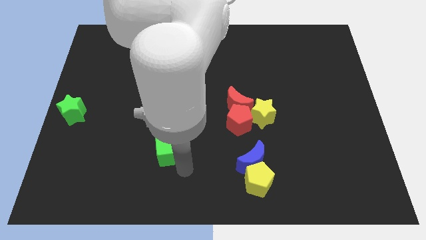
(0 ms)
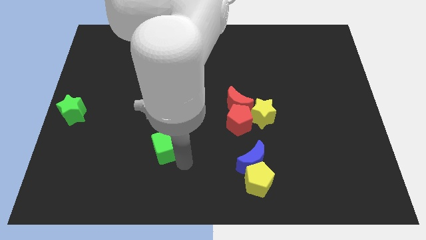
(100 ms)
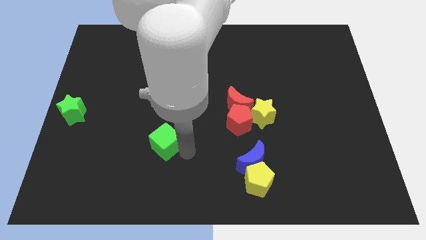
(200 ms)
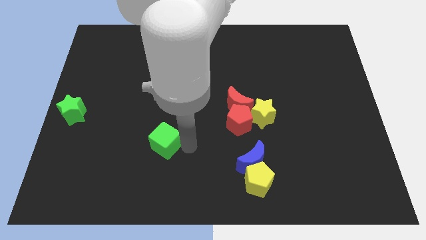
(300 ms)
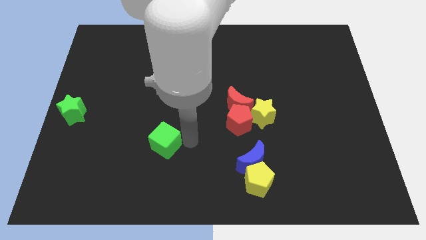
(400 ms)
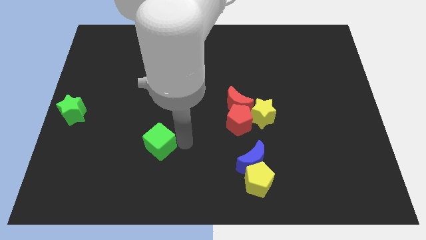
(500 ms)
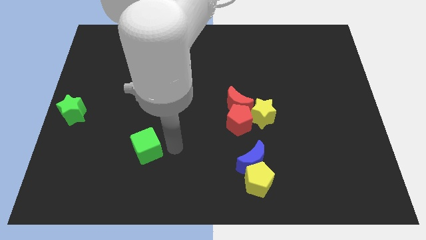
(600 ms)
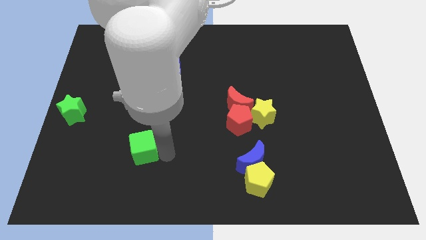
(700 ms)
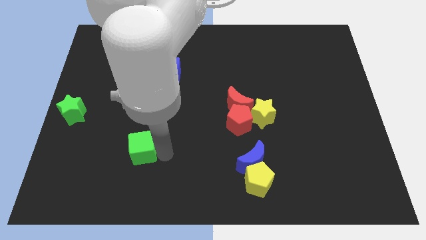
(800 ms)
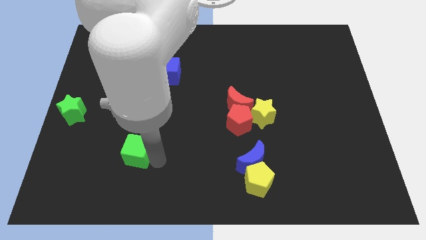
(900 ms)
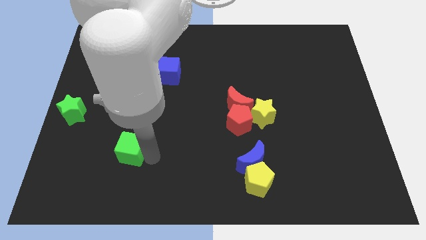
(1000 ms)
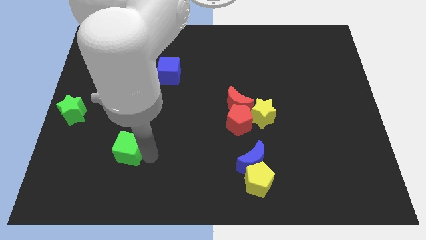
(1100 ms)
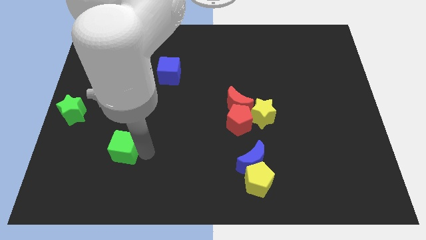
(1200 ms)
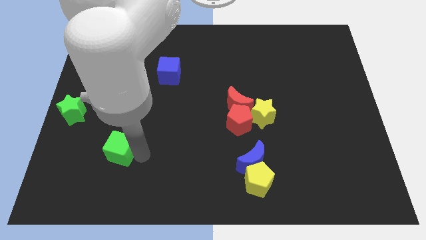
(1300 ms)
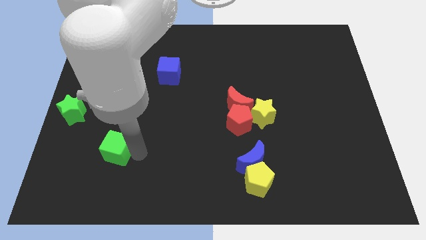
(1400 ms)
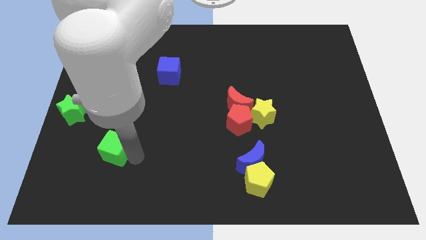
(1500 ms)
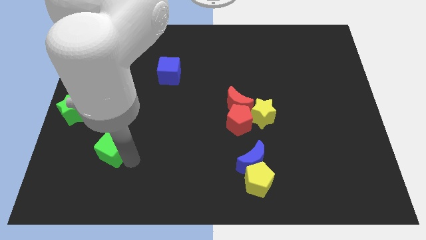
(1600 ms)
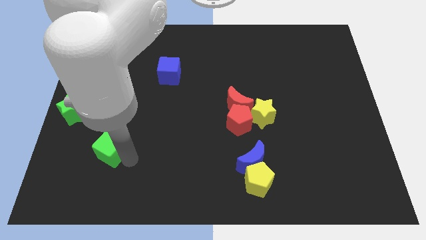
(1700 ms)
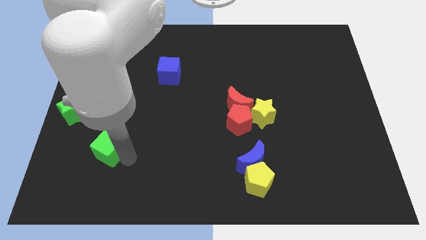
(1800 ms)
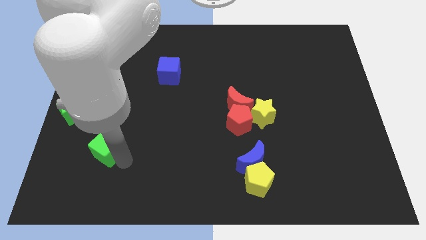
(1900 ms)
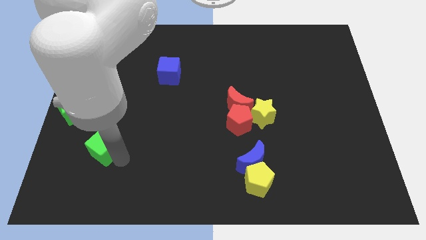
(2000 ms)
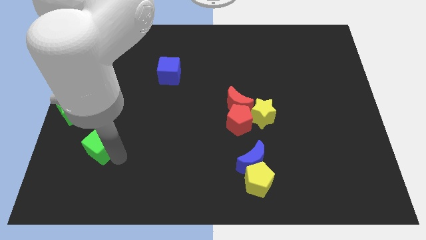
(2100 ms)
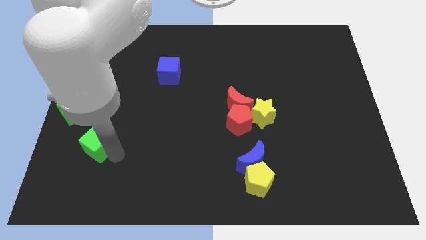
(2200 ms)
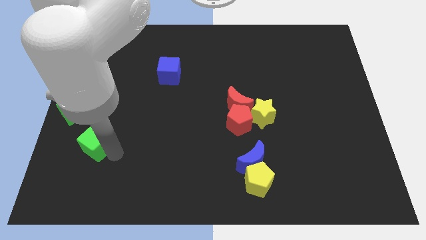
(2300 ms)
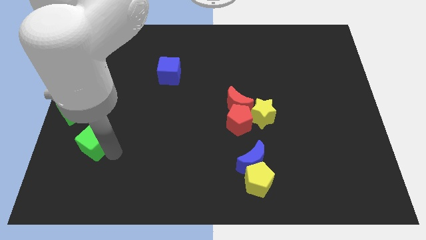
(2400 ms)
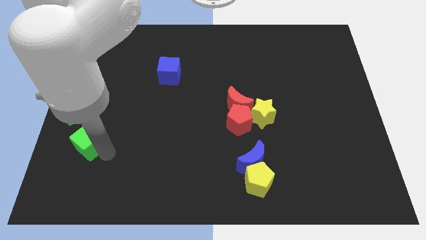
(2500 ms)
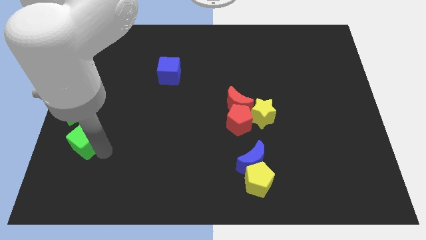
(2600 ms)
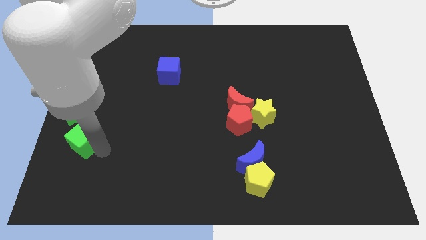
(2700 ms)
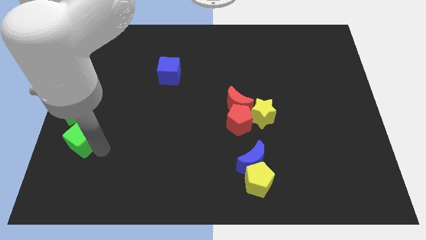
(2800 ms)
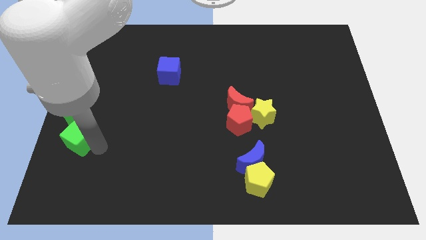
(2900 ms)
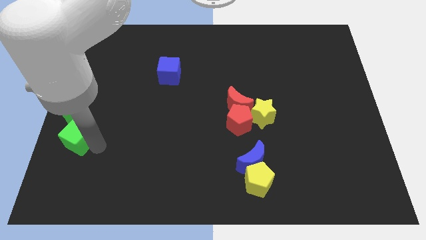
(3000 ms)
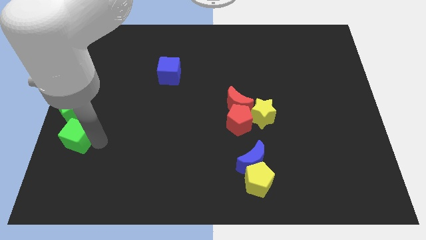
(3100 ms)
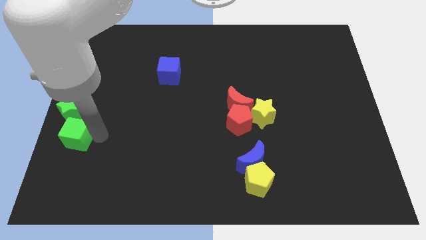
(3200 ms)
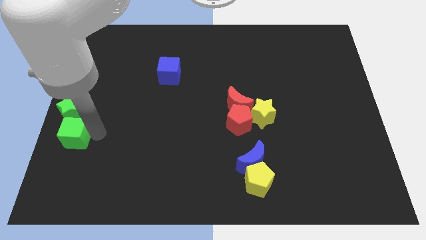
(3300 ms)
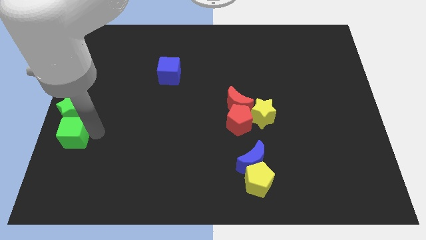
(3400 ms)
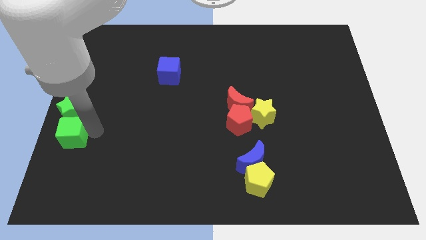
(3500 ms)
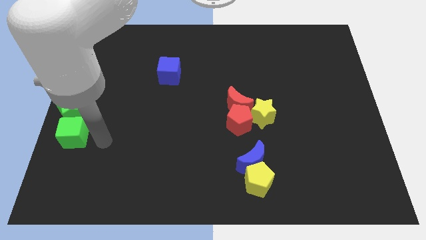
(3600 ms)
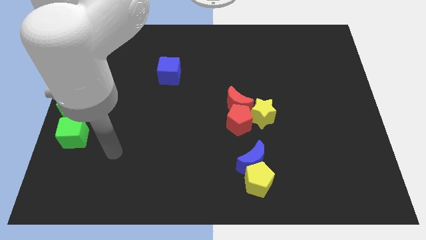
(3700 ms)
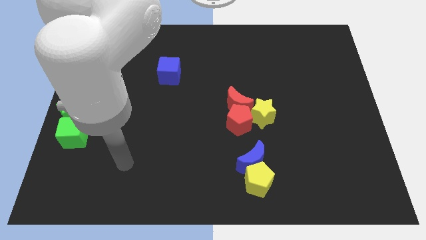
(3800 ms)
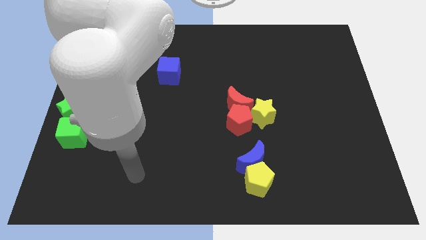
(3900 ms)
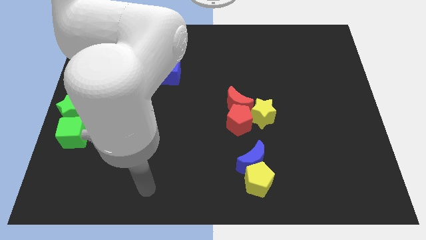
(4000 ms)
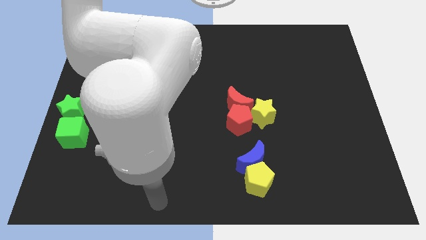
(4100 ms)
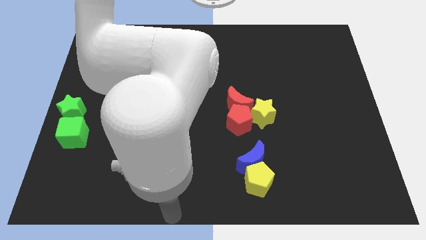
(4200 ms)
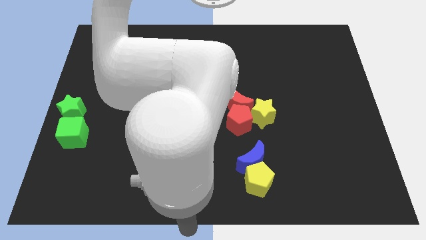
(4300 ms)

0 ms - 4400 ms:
place the green cube vertically below the green star

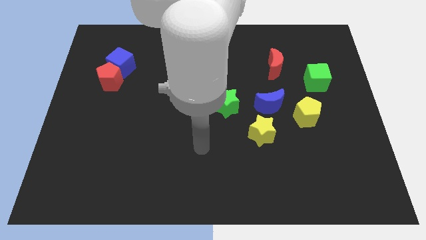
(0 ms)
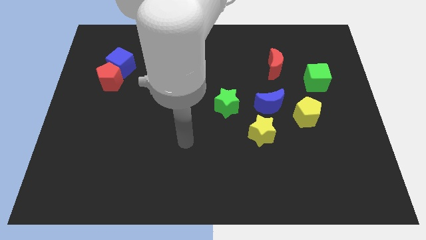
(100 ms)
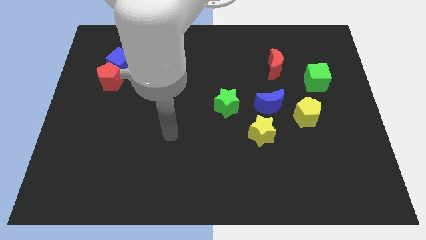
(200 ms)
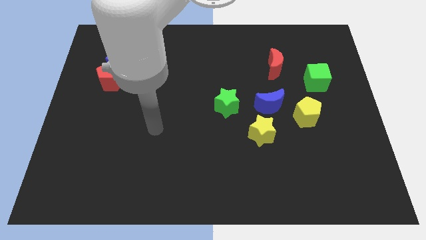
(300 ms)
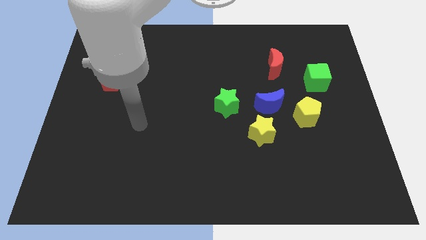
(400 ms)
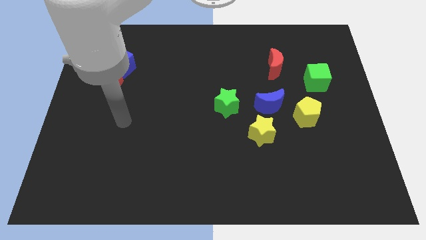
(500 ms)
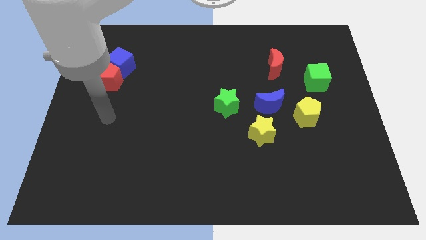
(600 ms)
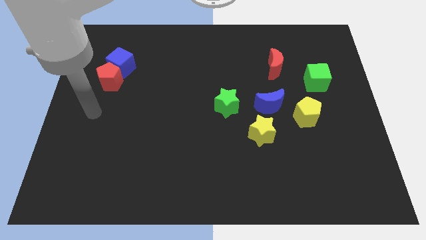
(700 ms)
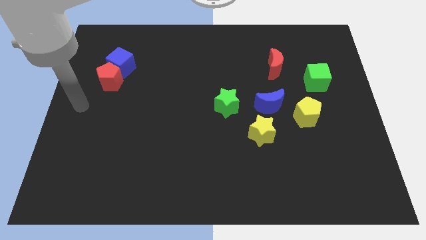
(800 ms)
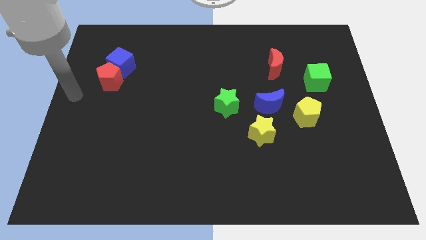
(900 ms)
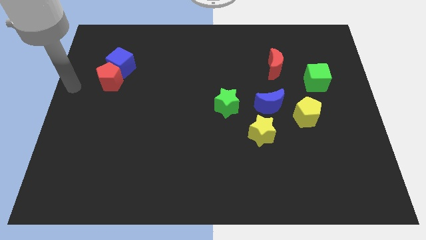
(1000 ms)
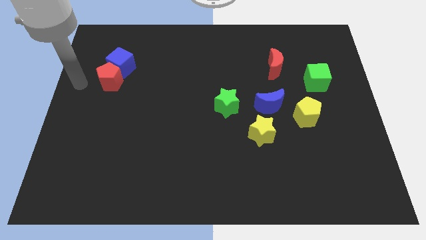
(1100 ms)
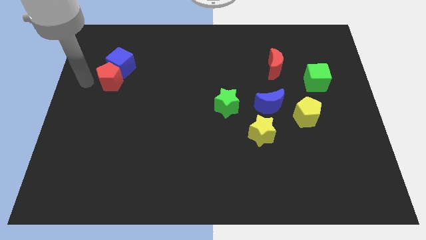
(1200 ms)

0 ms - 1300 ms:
place your arm at the left of the red pentagon

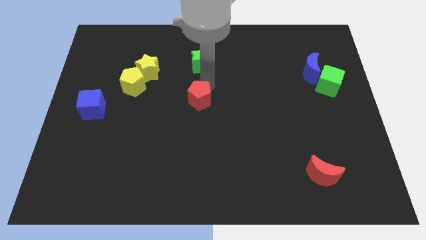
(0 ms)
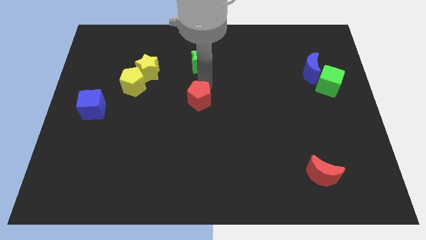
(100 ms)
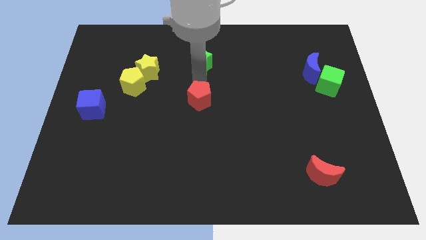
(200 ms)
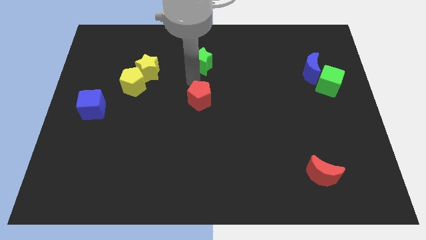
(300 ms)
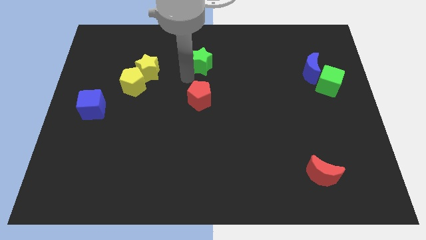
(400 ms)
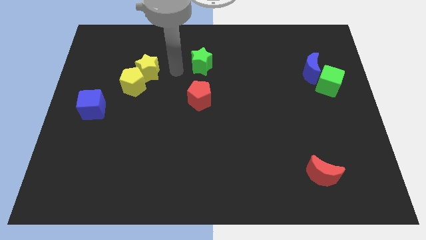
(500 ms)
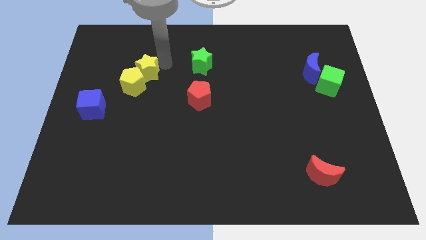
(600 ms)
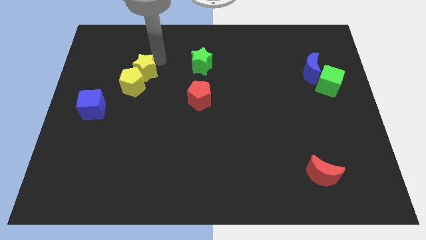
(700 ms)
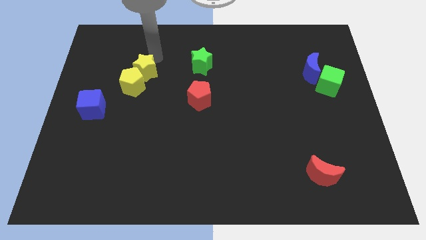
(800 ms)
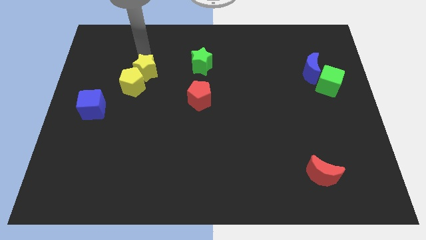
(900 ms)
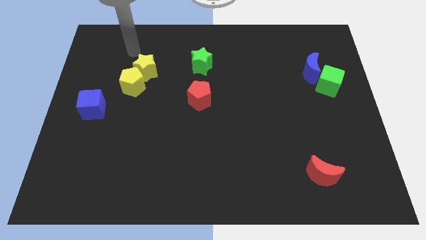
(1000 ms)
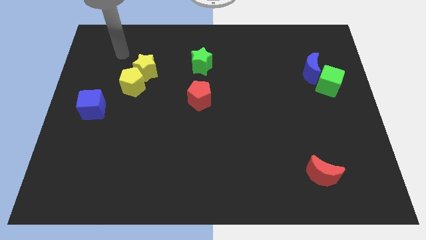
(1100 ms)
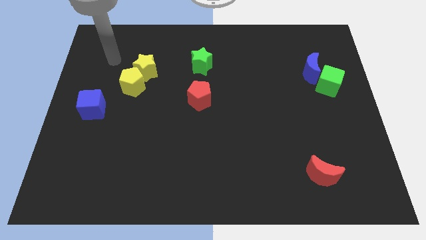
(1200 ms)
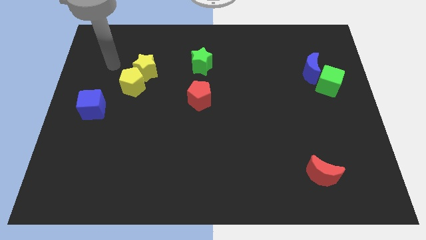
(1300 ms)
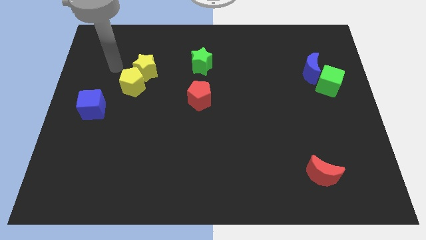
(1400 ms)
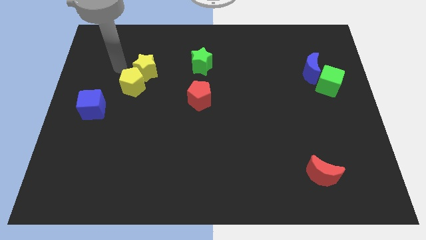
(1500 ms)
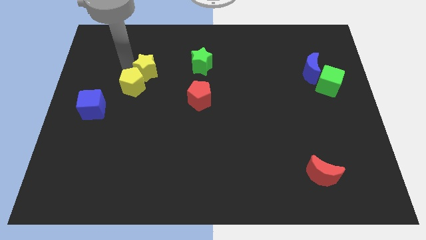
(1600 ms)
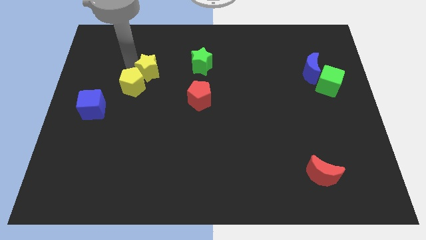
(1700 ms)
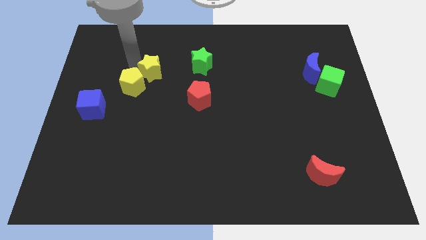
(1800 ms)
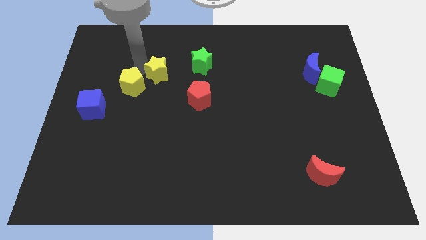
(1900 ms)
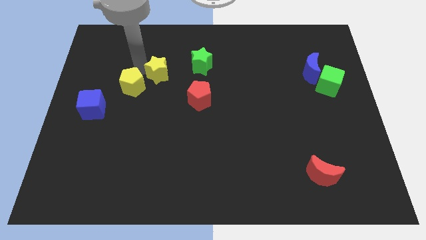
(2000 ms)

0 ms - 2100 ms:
move the yellow star slightly away from the yellow pentagon

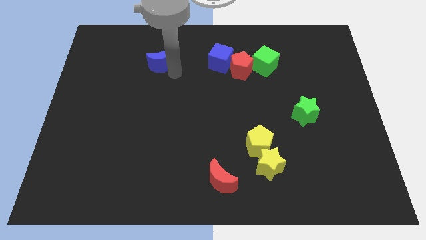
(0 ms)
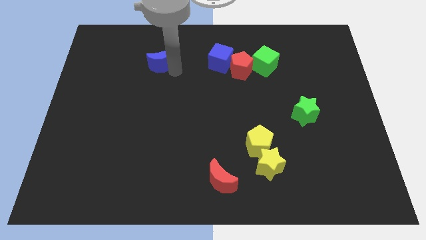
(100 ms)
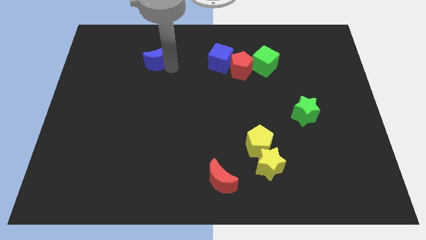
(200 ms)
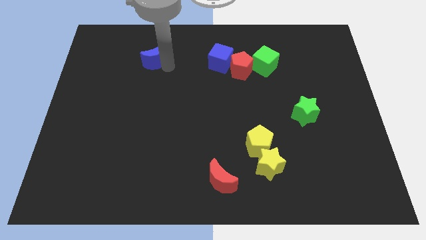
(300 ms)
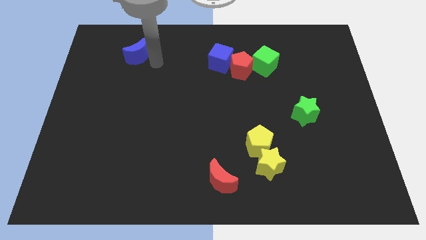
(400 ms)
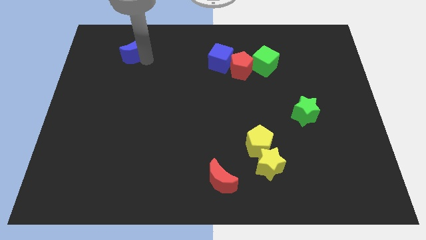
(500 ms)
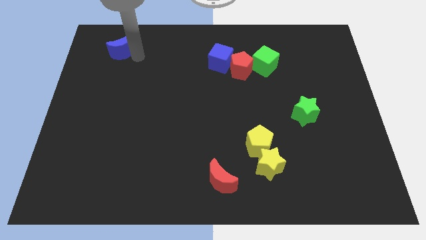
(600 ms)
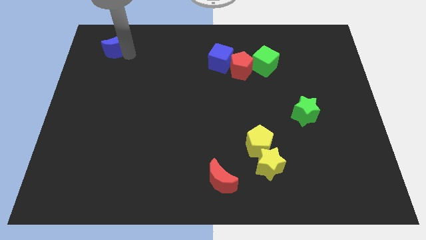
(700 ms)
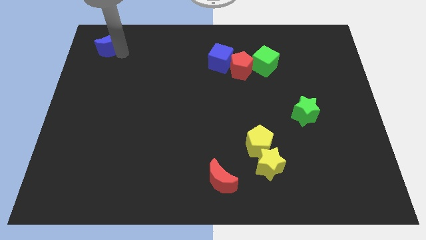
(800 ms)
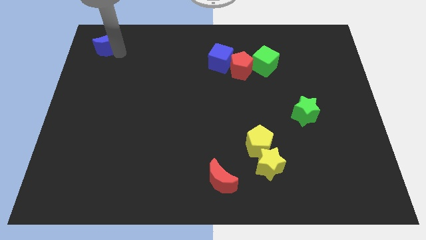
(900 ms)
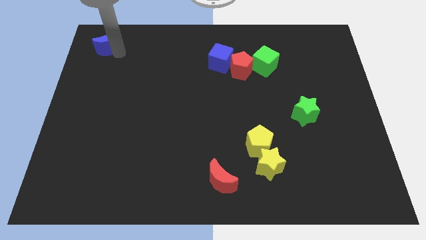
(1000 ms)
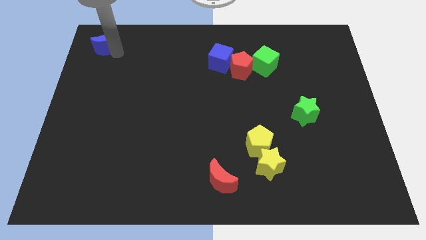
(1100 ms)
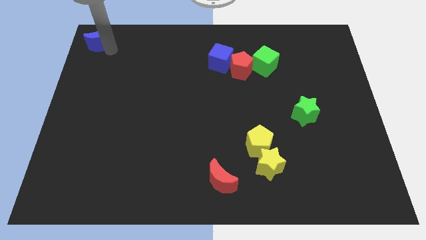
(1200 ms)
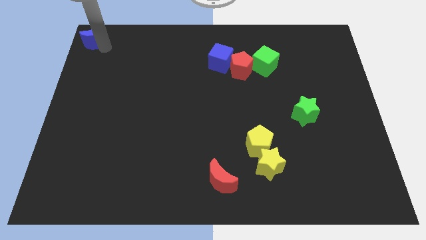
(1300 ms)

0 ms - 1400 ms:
move the blue crescent to the top left corner of the board
